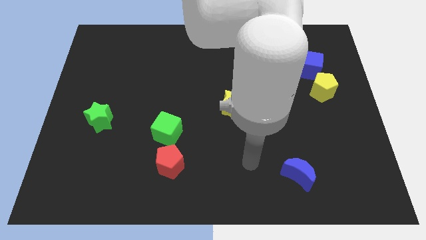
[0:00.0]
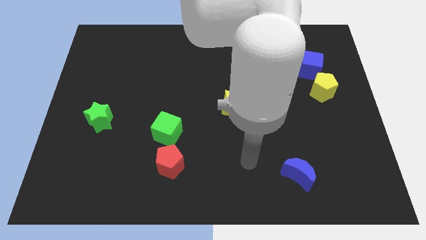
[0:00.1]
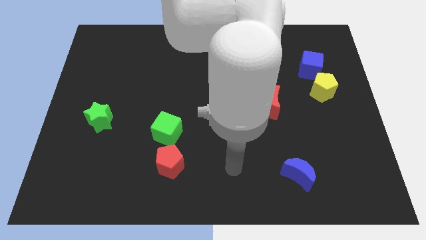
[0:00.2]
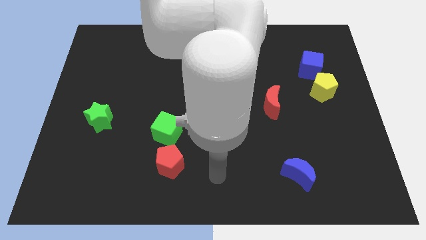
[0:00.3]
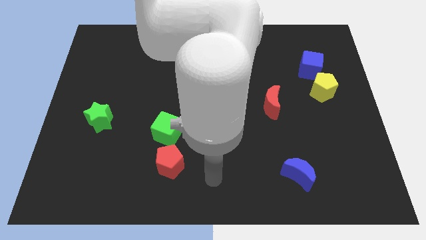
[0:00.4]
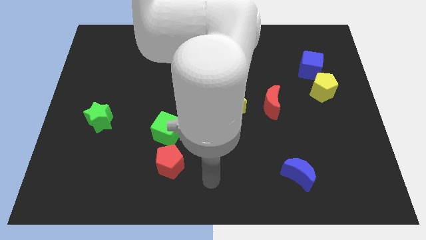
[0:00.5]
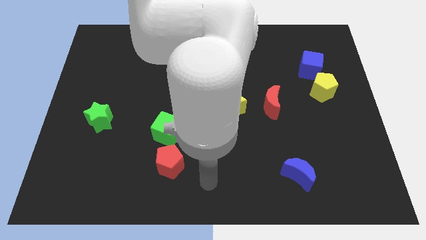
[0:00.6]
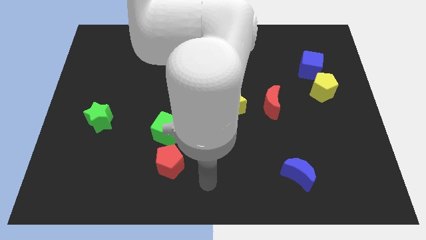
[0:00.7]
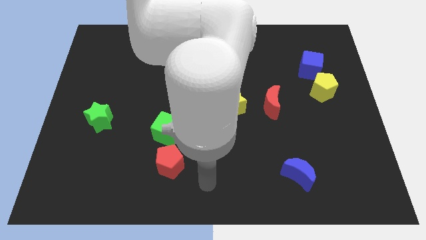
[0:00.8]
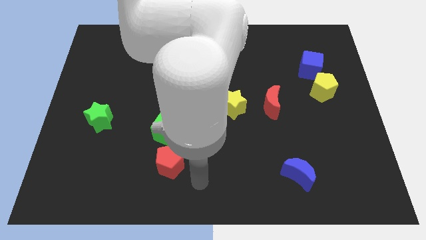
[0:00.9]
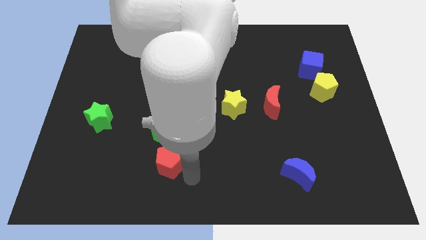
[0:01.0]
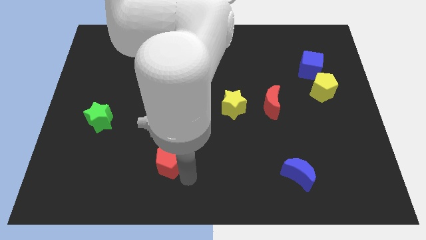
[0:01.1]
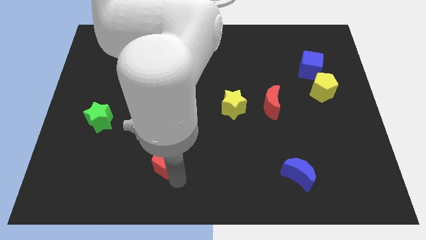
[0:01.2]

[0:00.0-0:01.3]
place your arm at the bottom right side of the red pentagon

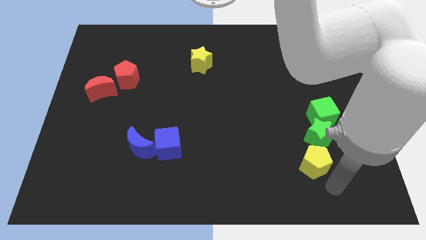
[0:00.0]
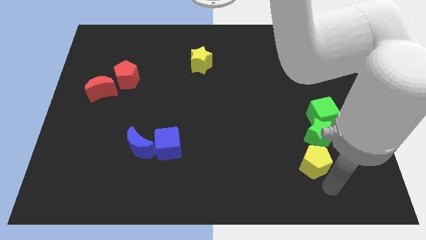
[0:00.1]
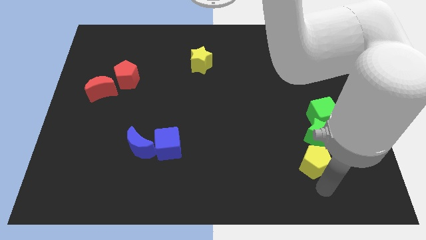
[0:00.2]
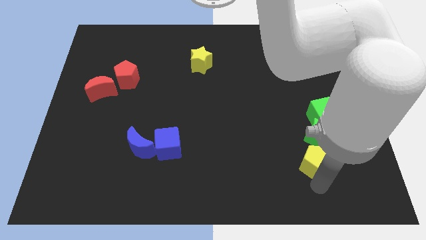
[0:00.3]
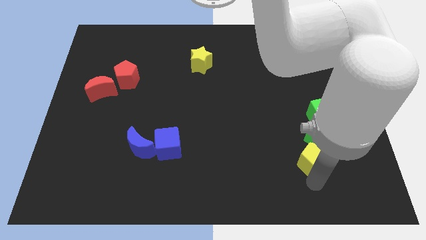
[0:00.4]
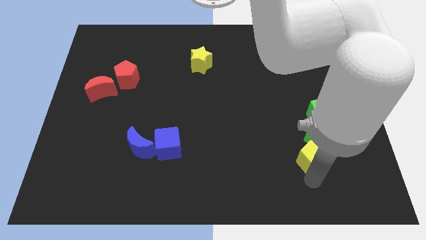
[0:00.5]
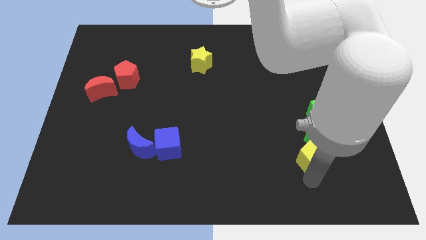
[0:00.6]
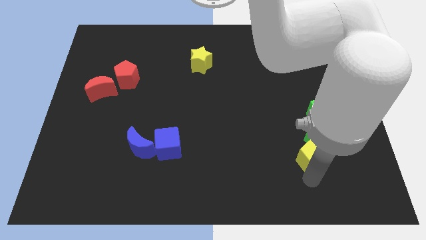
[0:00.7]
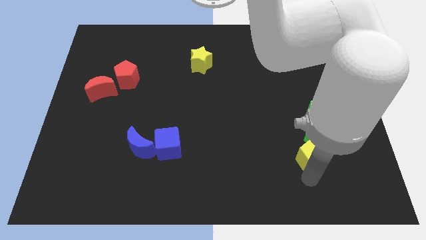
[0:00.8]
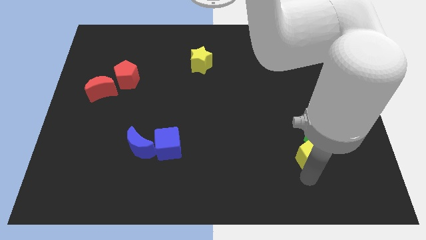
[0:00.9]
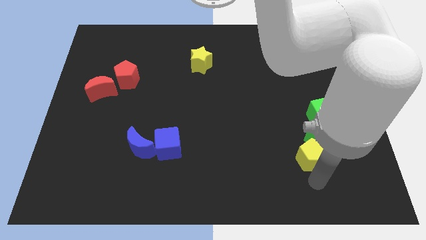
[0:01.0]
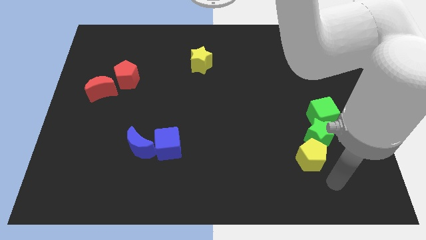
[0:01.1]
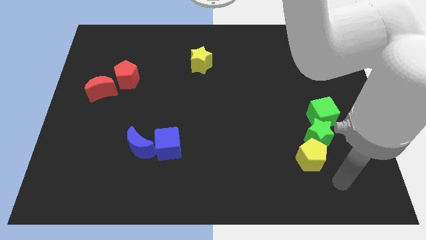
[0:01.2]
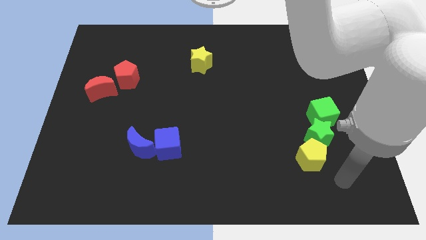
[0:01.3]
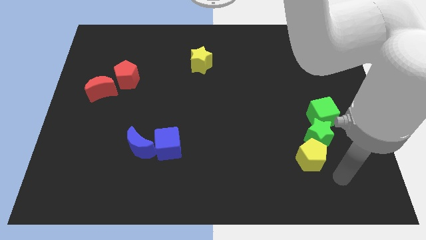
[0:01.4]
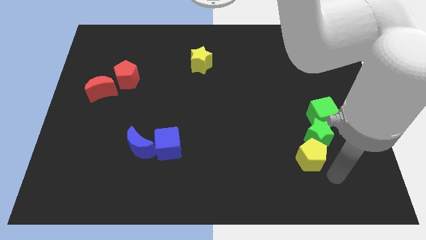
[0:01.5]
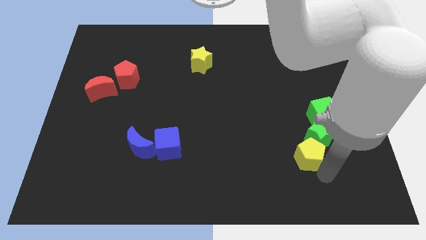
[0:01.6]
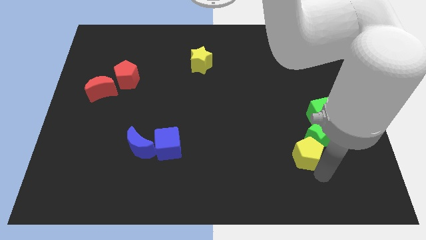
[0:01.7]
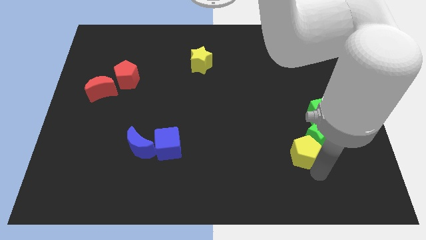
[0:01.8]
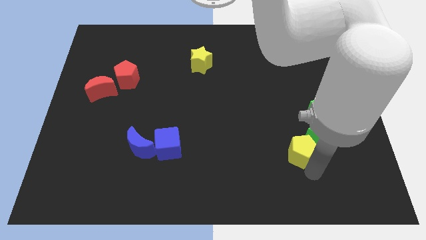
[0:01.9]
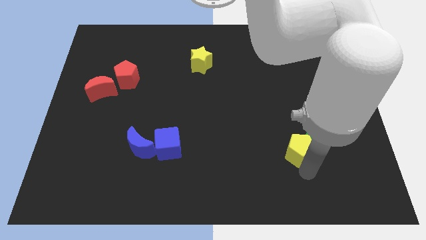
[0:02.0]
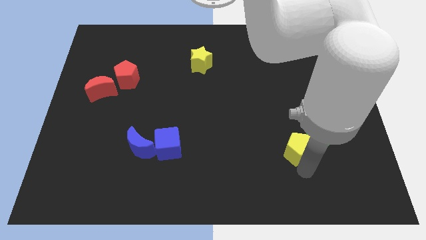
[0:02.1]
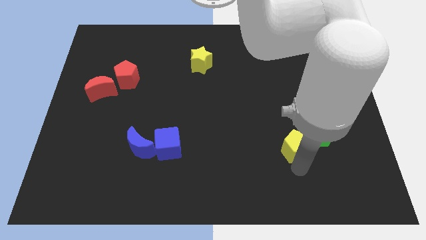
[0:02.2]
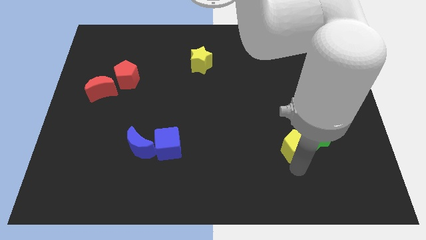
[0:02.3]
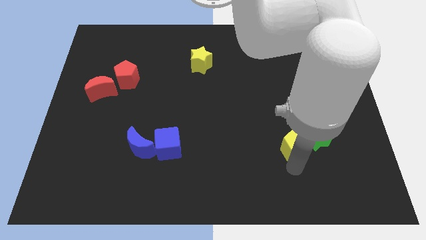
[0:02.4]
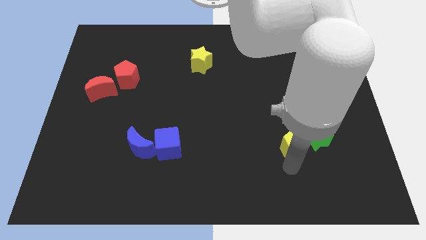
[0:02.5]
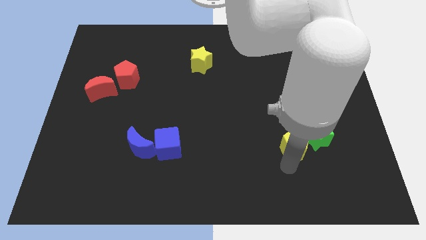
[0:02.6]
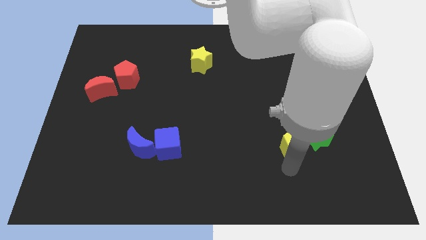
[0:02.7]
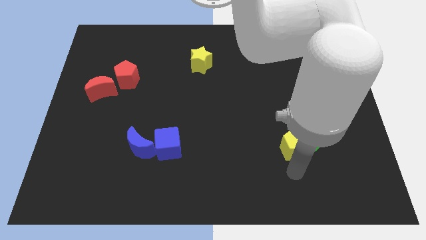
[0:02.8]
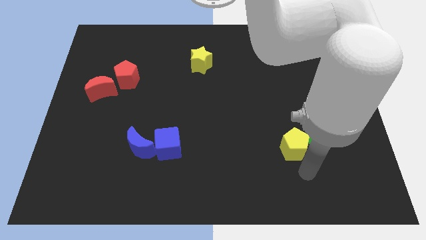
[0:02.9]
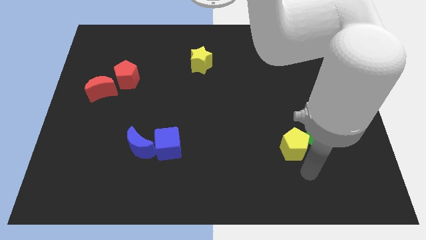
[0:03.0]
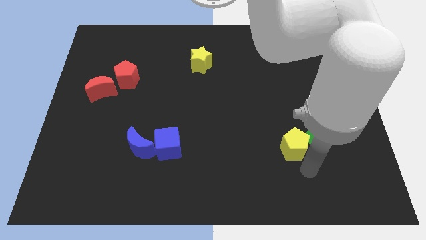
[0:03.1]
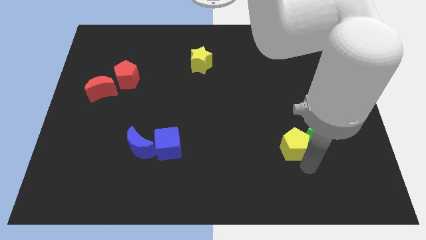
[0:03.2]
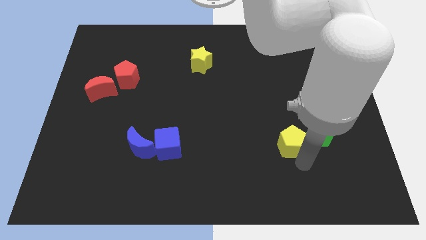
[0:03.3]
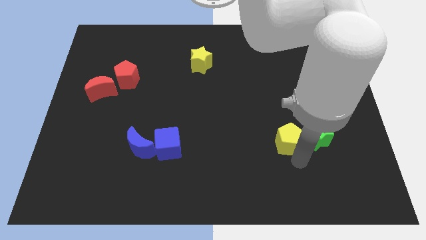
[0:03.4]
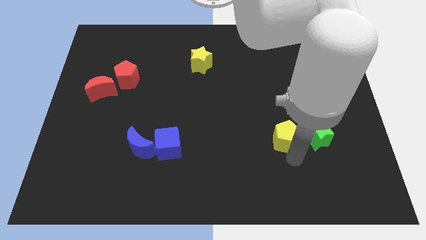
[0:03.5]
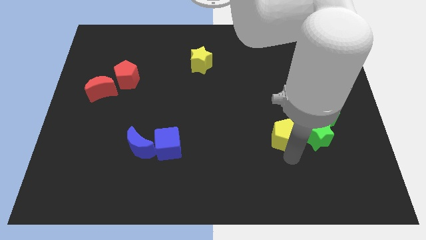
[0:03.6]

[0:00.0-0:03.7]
move the yellow pentagon to the left of green star

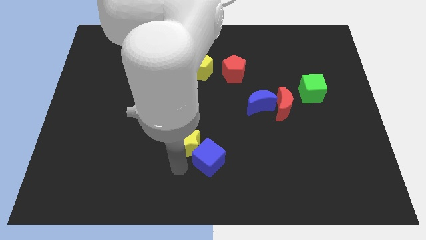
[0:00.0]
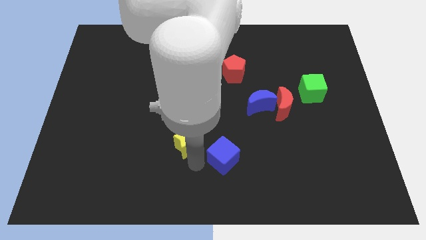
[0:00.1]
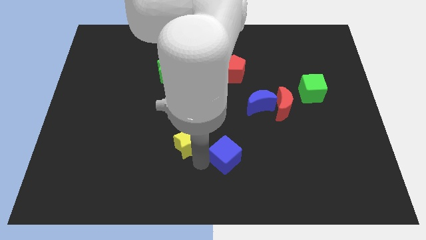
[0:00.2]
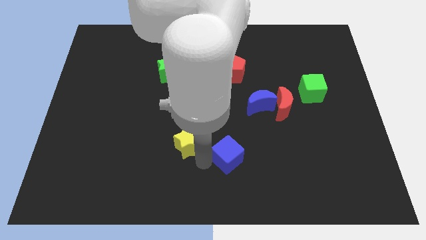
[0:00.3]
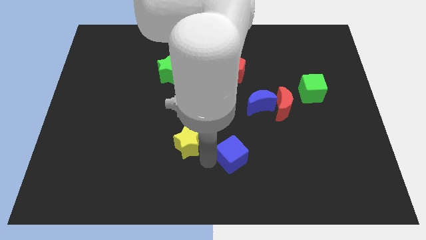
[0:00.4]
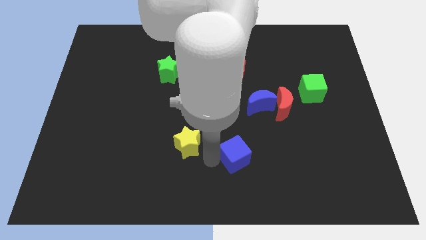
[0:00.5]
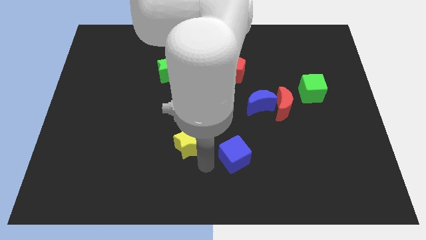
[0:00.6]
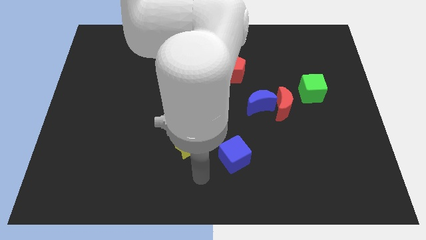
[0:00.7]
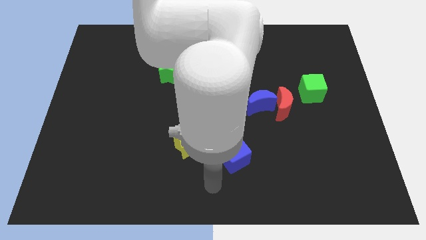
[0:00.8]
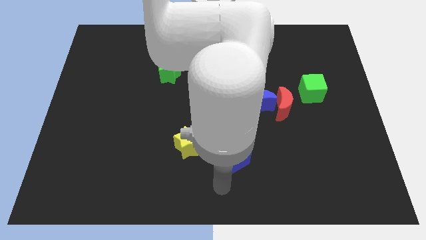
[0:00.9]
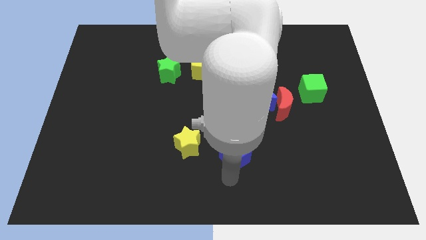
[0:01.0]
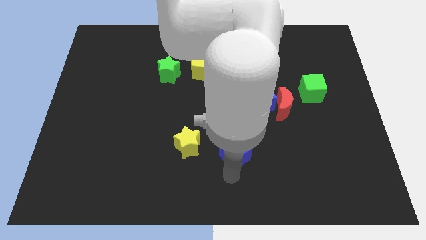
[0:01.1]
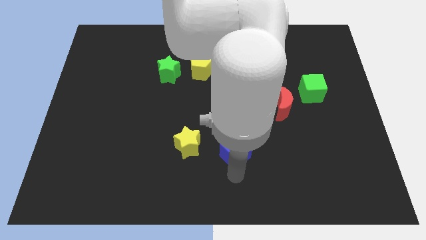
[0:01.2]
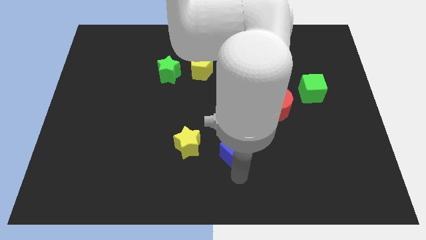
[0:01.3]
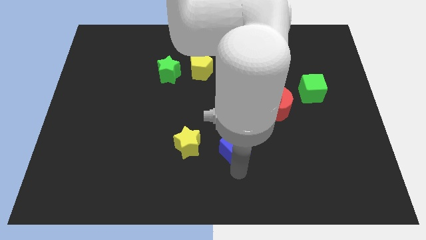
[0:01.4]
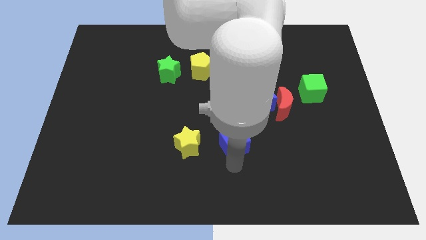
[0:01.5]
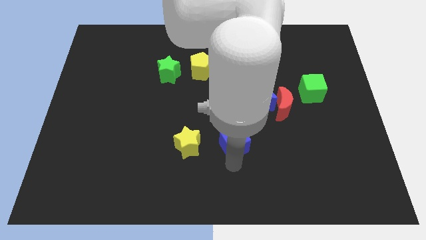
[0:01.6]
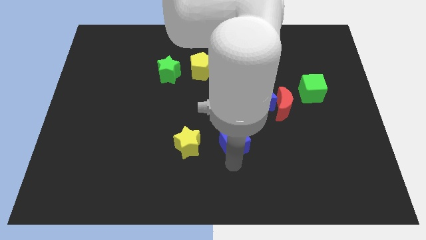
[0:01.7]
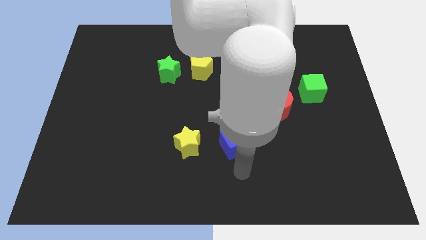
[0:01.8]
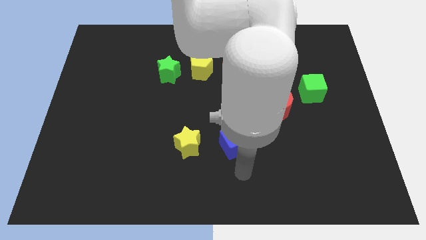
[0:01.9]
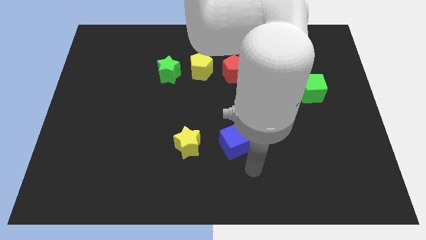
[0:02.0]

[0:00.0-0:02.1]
place the blue cube right to the yellow star

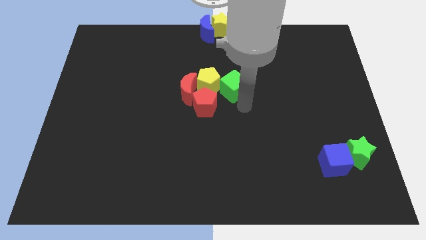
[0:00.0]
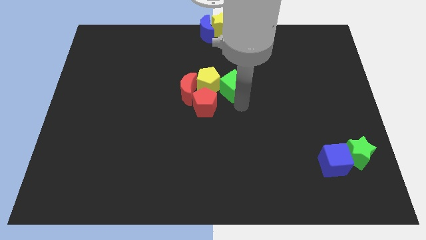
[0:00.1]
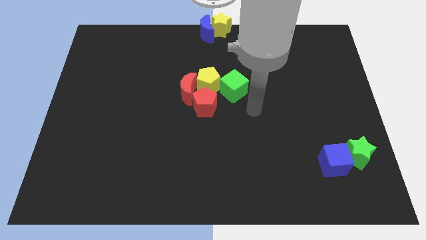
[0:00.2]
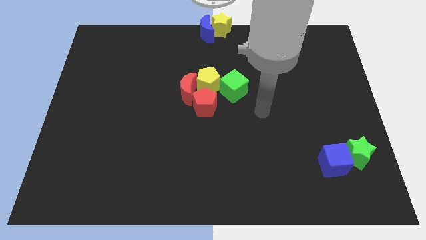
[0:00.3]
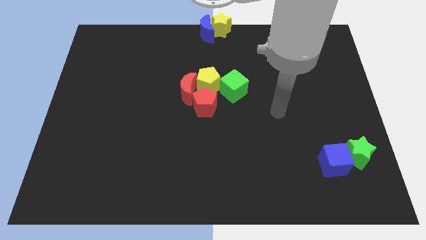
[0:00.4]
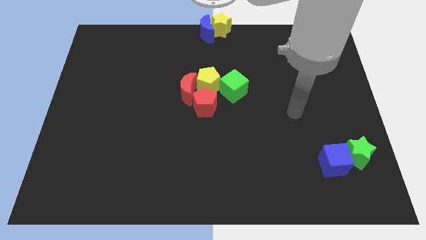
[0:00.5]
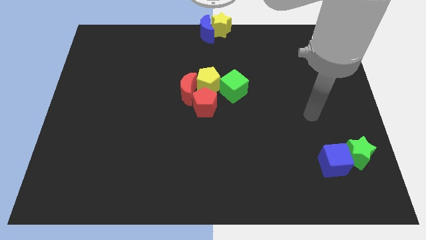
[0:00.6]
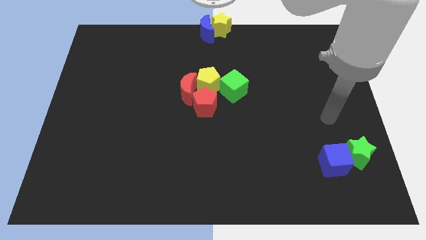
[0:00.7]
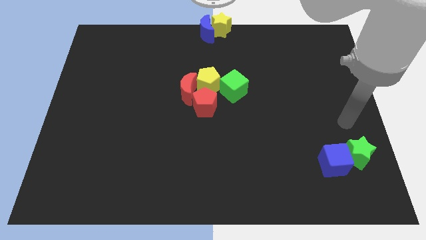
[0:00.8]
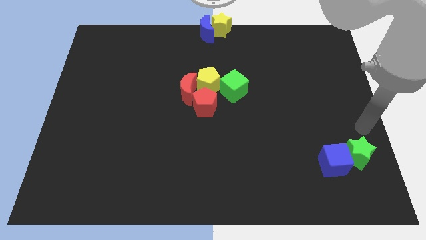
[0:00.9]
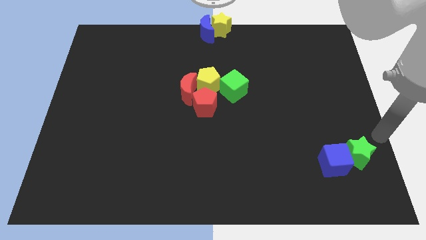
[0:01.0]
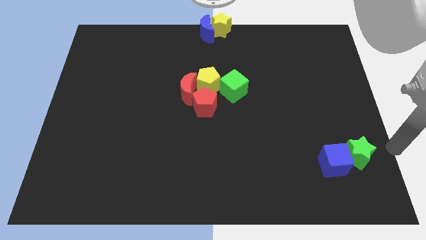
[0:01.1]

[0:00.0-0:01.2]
slide your arm away from green cube

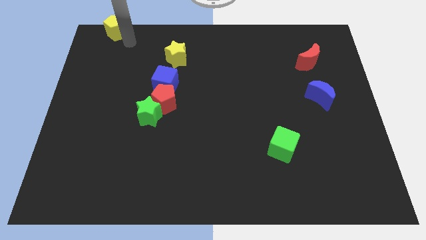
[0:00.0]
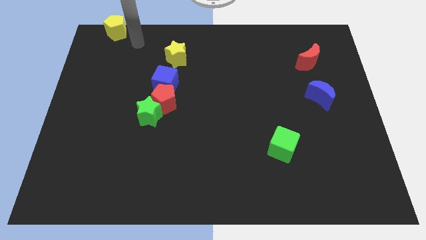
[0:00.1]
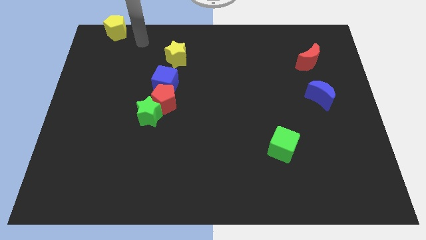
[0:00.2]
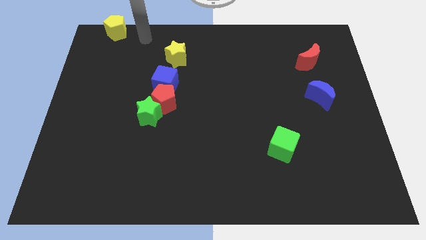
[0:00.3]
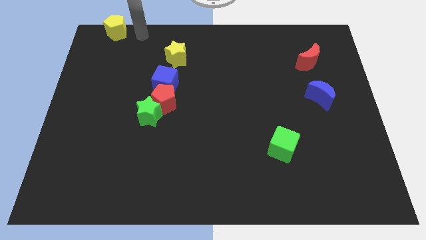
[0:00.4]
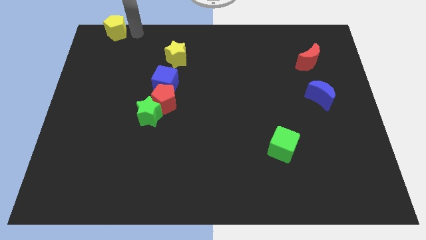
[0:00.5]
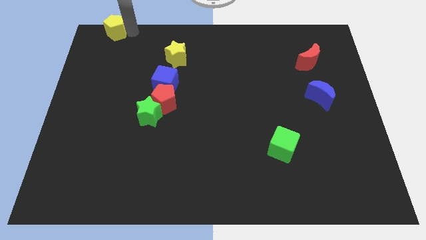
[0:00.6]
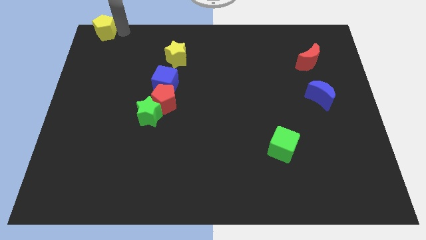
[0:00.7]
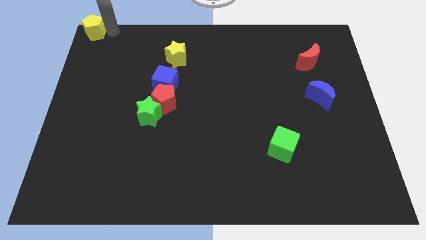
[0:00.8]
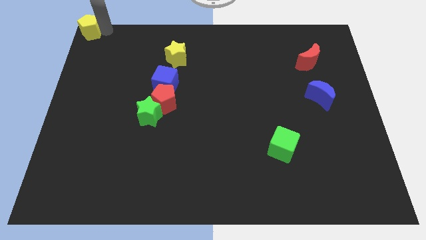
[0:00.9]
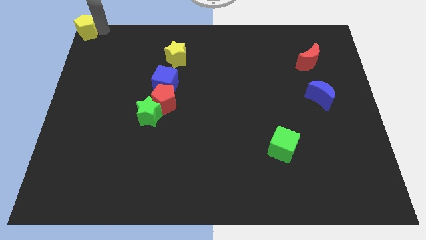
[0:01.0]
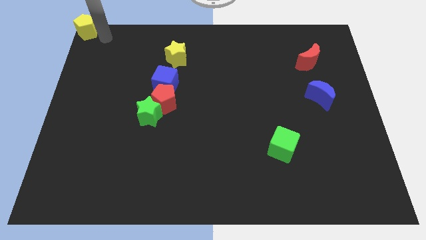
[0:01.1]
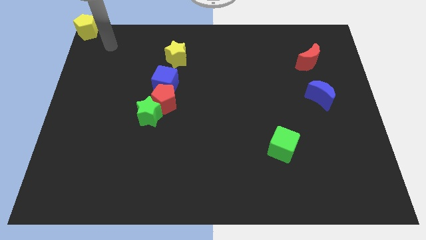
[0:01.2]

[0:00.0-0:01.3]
slide yellow pentagon to top left corner
